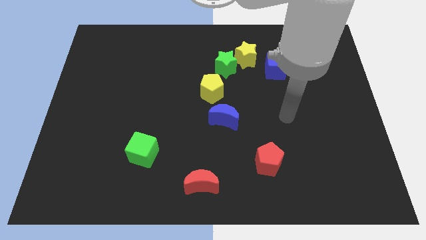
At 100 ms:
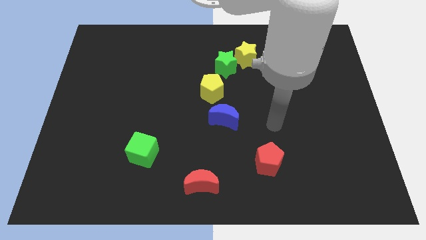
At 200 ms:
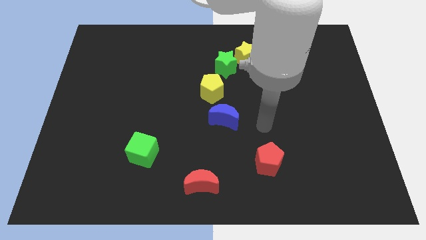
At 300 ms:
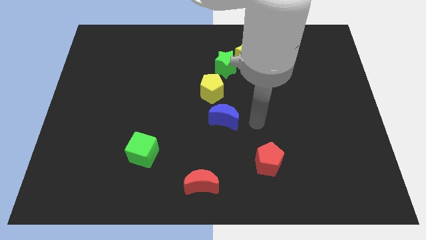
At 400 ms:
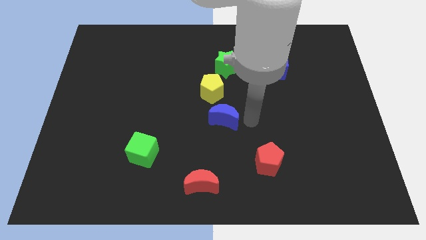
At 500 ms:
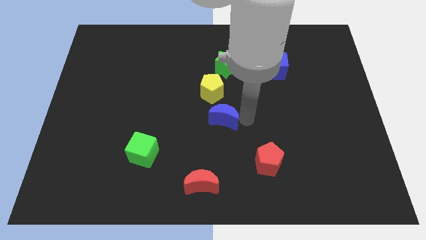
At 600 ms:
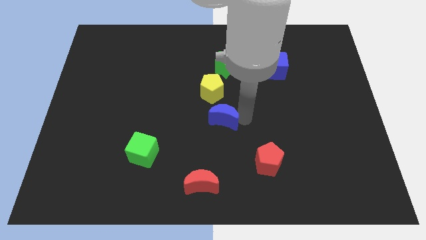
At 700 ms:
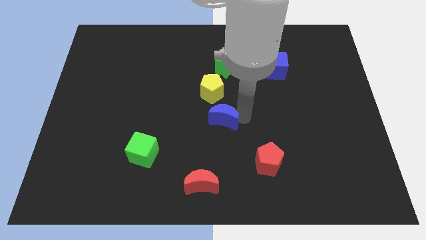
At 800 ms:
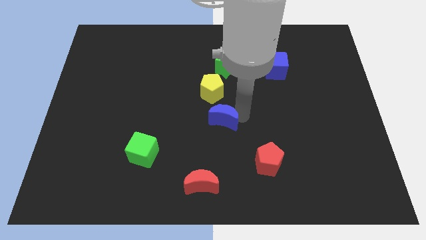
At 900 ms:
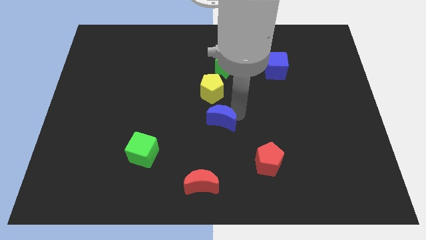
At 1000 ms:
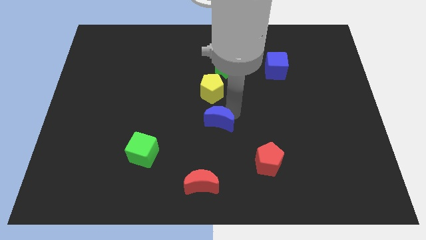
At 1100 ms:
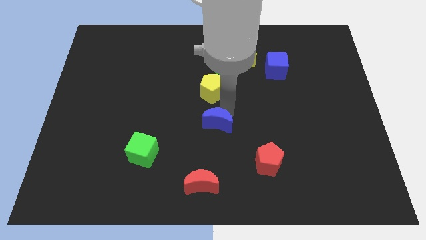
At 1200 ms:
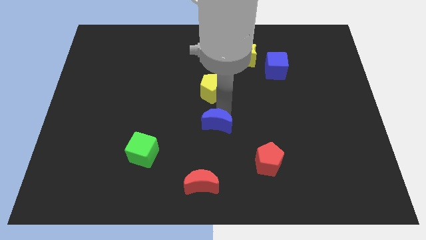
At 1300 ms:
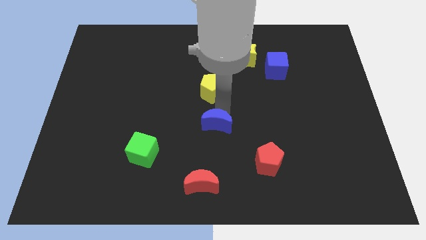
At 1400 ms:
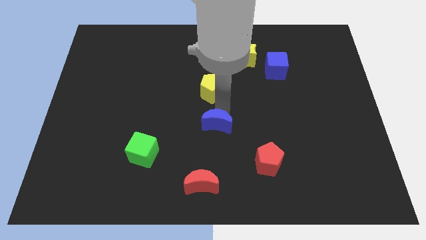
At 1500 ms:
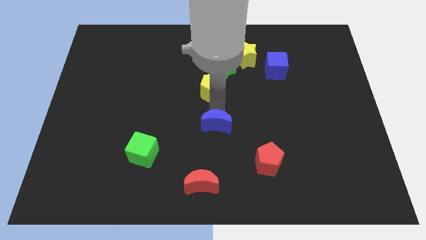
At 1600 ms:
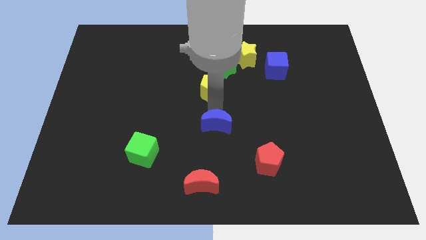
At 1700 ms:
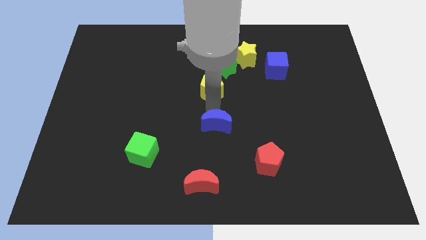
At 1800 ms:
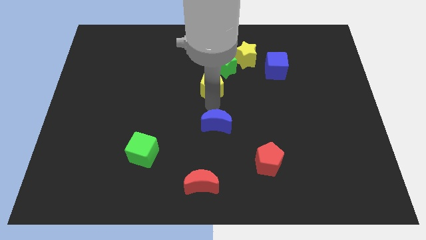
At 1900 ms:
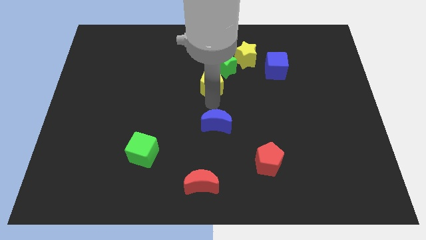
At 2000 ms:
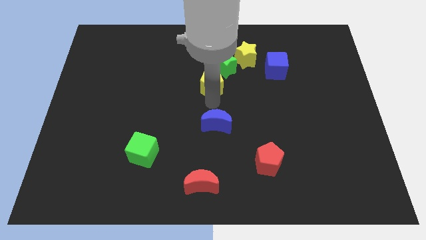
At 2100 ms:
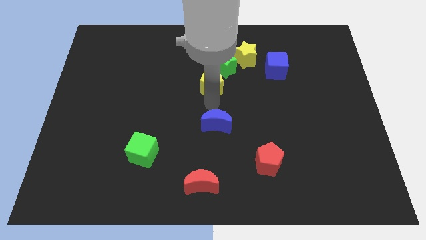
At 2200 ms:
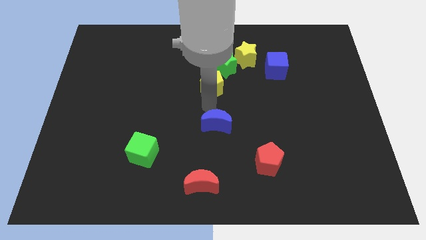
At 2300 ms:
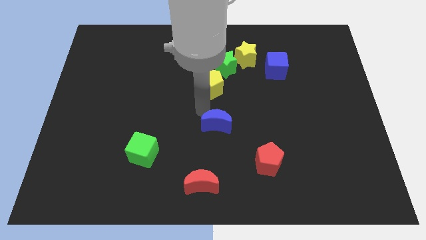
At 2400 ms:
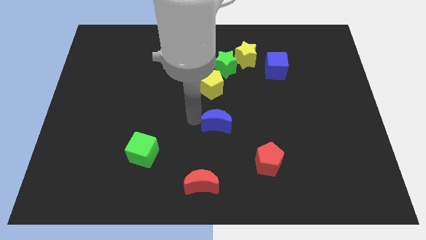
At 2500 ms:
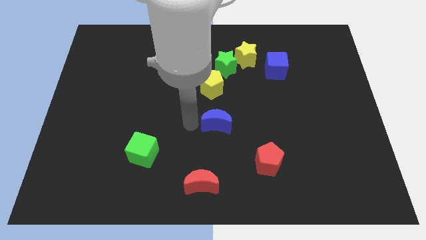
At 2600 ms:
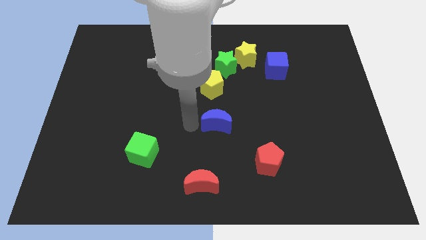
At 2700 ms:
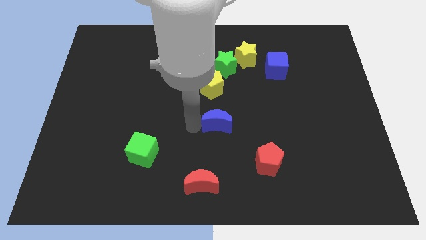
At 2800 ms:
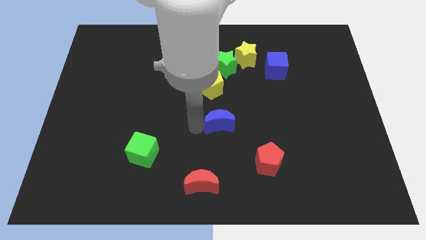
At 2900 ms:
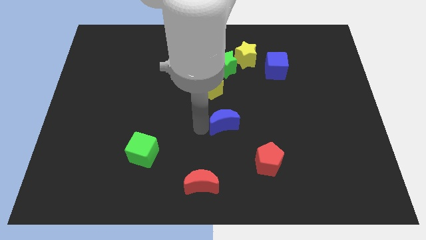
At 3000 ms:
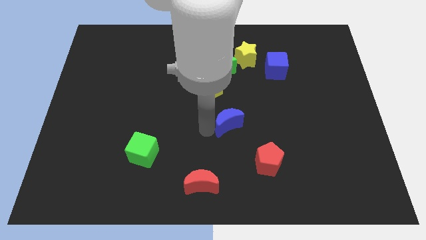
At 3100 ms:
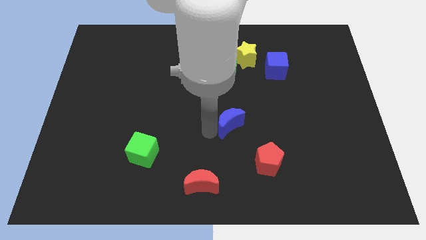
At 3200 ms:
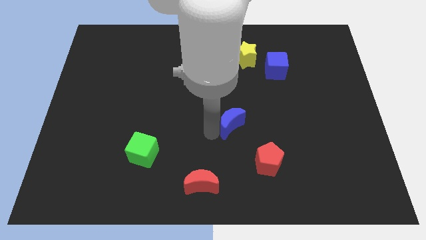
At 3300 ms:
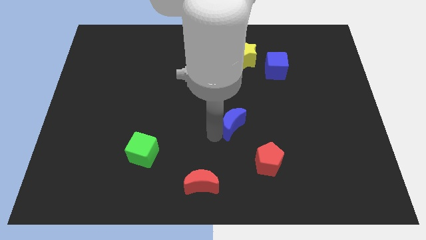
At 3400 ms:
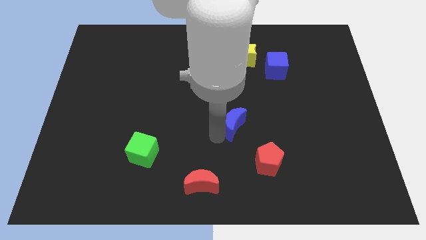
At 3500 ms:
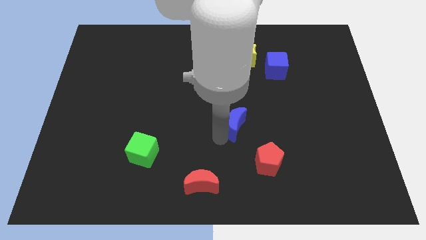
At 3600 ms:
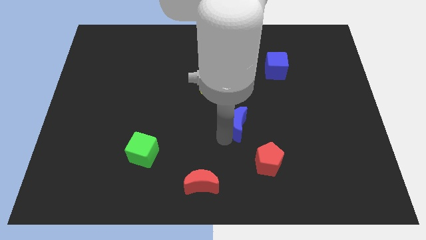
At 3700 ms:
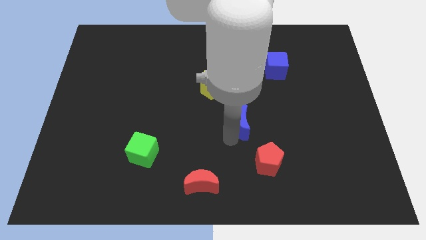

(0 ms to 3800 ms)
move blue moon slightly right

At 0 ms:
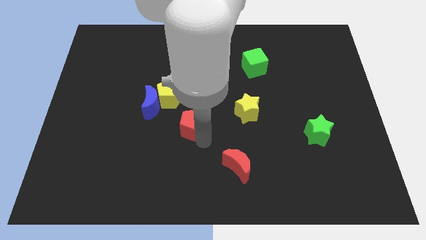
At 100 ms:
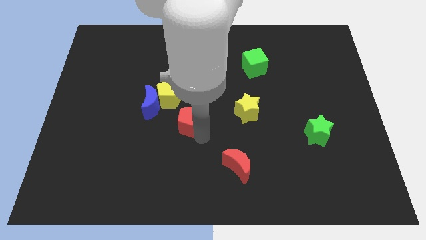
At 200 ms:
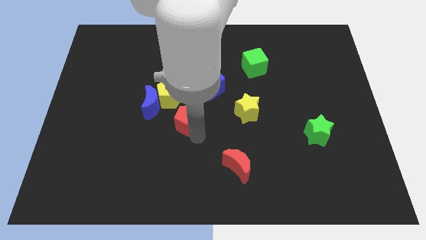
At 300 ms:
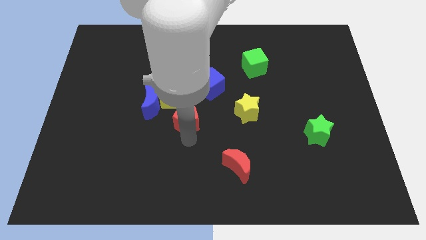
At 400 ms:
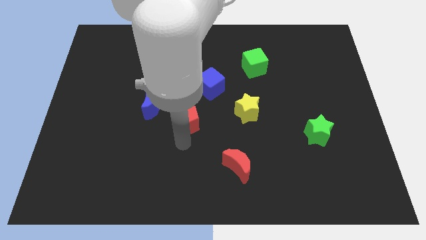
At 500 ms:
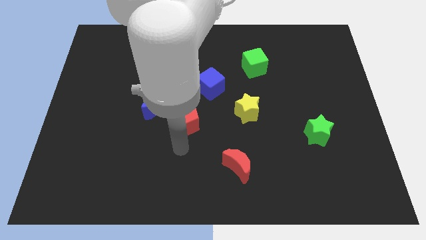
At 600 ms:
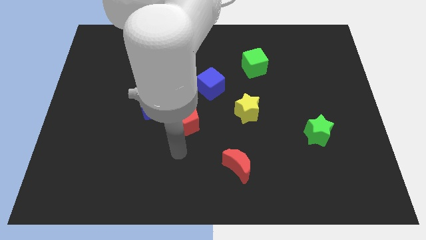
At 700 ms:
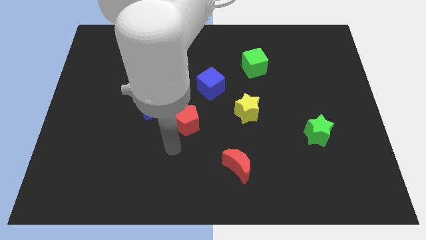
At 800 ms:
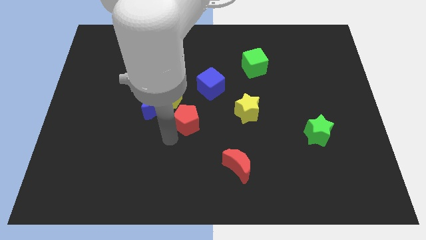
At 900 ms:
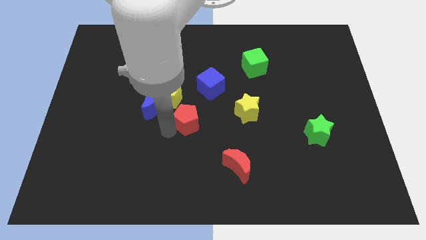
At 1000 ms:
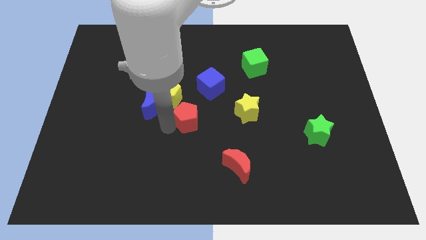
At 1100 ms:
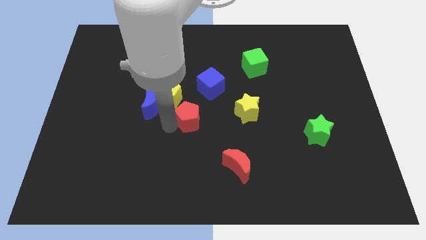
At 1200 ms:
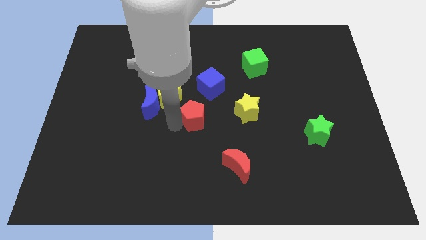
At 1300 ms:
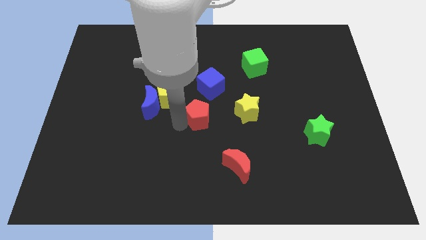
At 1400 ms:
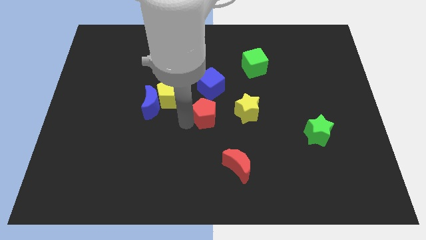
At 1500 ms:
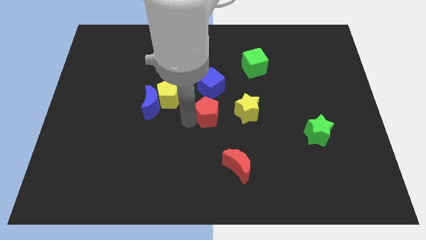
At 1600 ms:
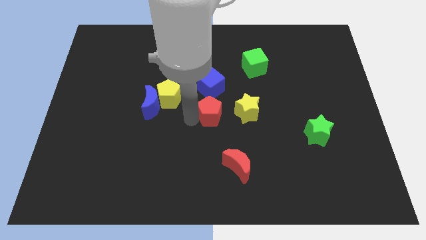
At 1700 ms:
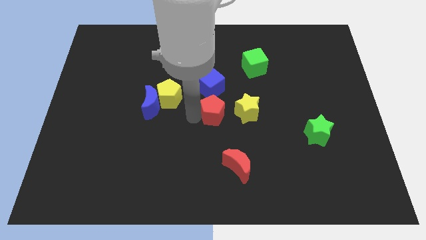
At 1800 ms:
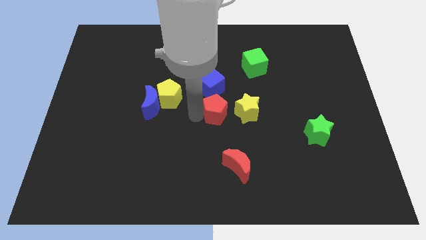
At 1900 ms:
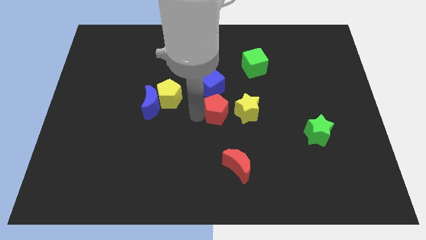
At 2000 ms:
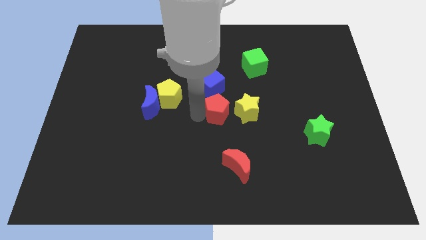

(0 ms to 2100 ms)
push the red pentagon close to the left side of the yellow star

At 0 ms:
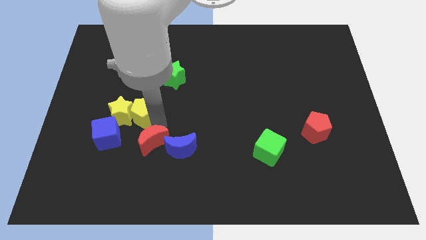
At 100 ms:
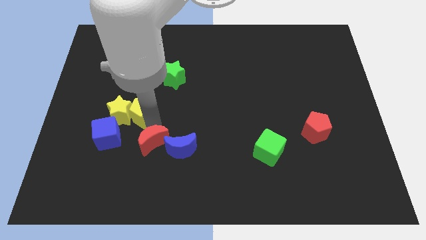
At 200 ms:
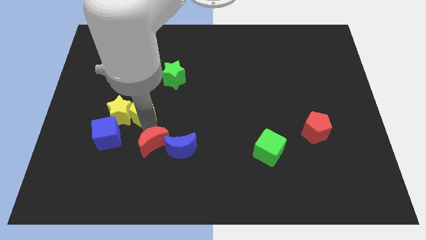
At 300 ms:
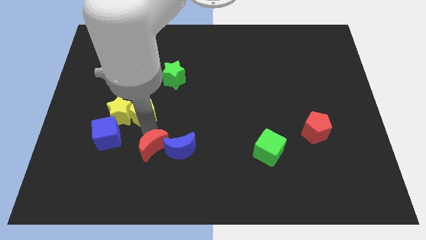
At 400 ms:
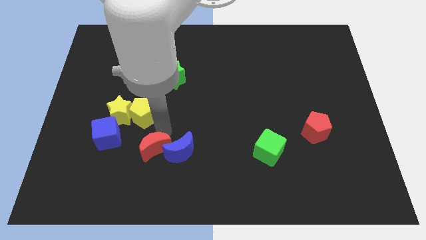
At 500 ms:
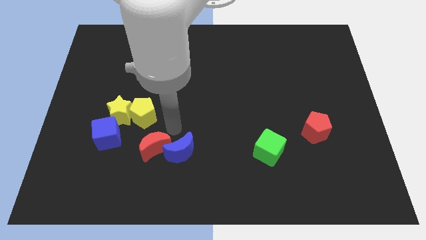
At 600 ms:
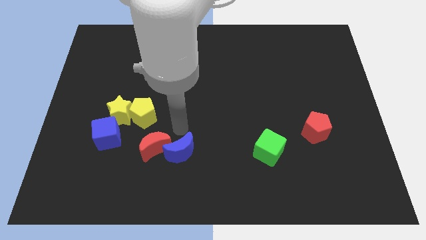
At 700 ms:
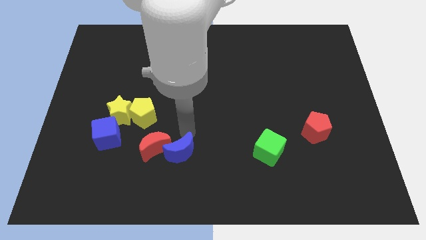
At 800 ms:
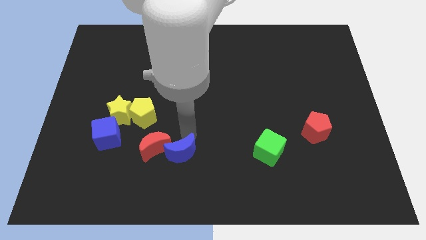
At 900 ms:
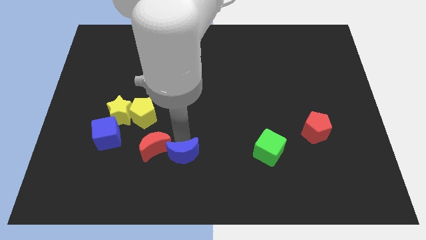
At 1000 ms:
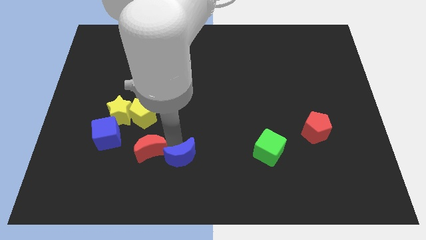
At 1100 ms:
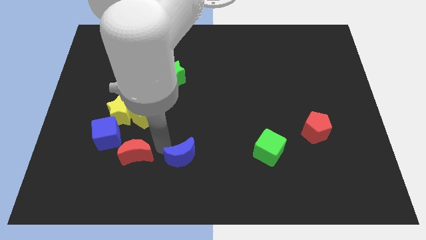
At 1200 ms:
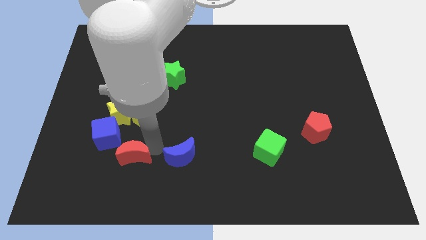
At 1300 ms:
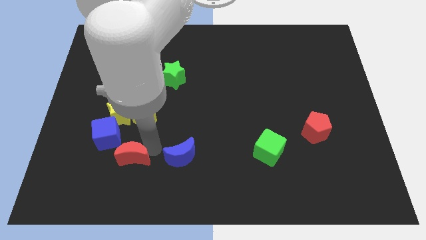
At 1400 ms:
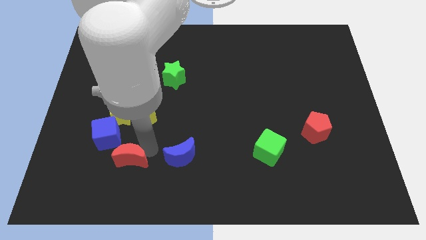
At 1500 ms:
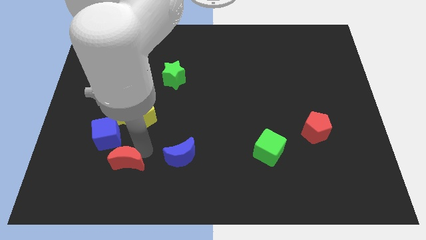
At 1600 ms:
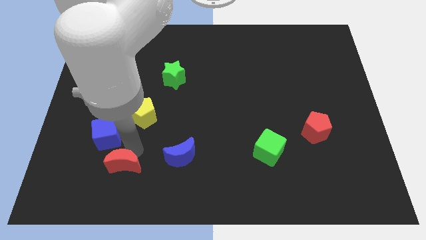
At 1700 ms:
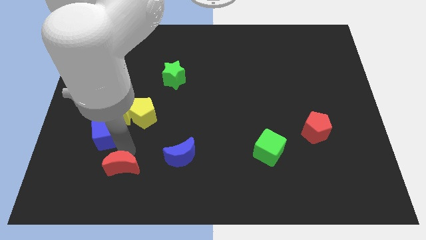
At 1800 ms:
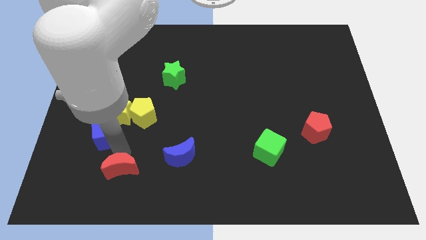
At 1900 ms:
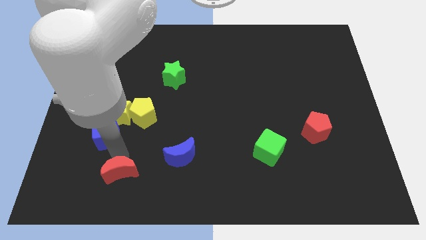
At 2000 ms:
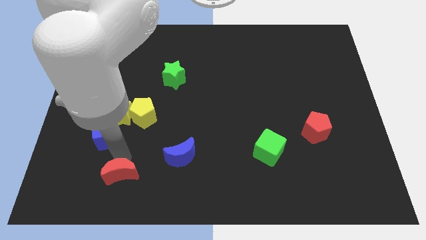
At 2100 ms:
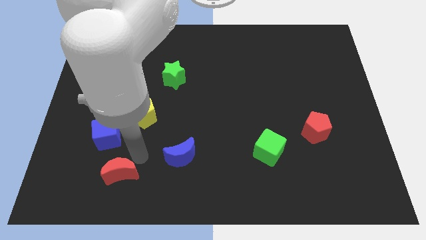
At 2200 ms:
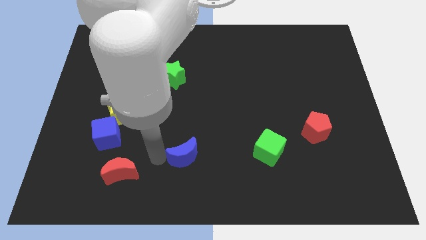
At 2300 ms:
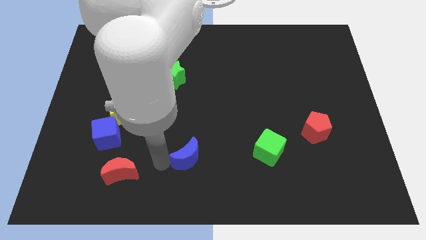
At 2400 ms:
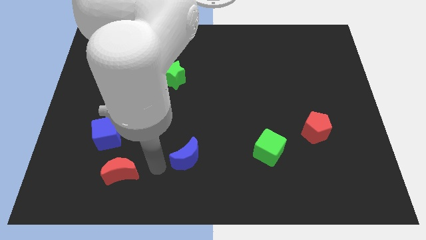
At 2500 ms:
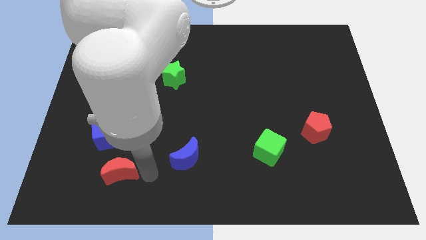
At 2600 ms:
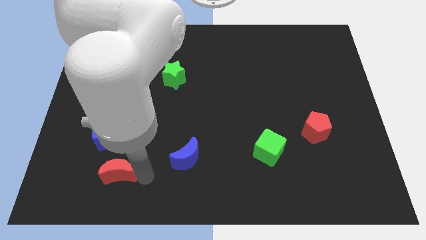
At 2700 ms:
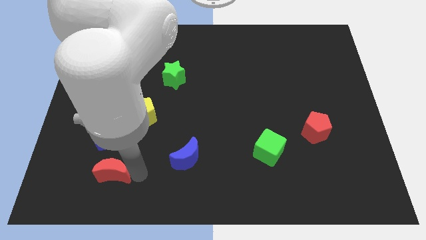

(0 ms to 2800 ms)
place the red moon diagonally bottom left to blue moon

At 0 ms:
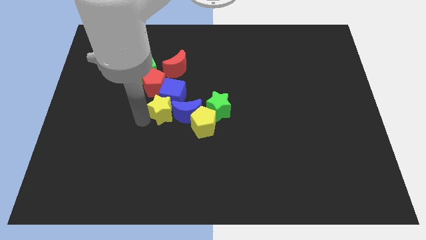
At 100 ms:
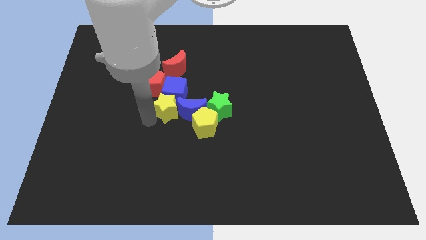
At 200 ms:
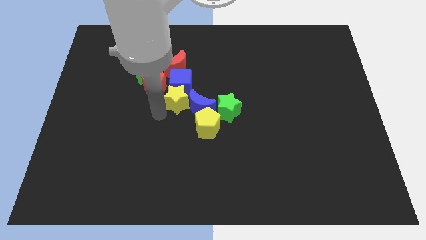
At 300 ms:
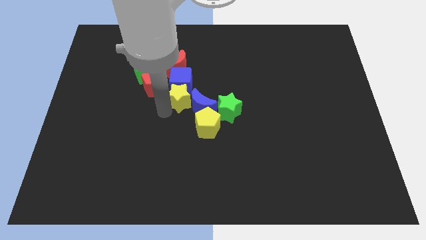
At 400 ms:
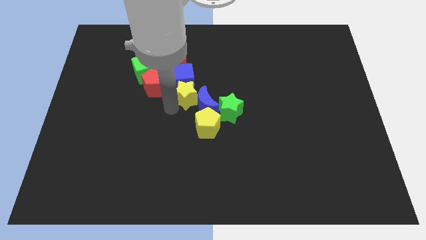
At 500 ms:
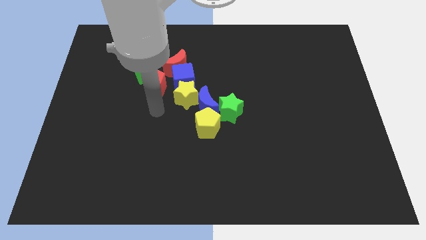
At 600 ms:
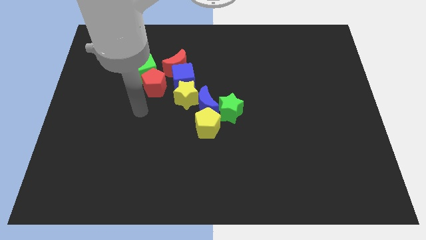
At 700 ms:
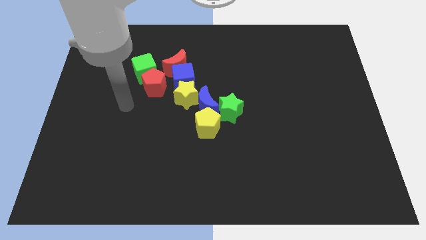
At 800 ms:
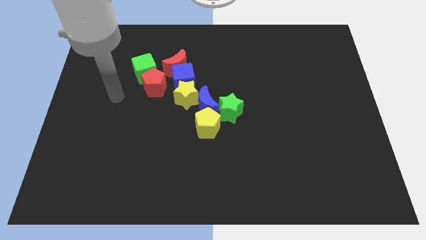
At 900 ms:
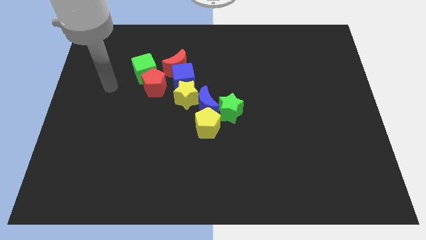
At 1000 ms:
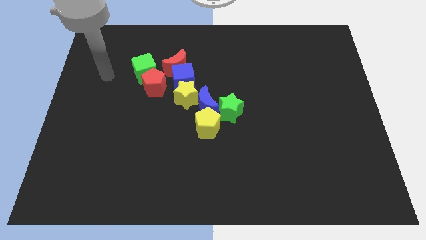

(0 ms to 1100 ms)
move the yellow star into the blue cube
